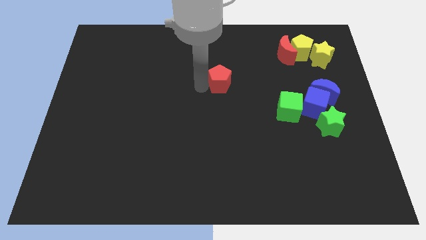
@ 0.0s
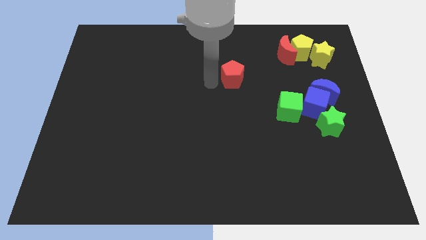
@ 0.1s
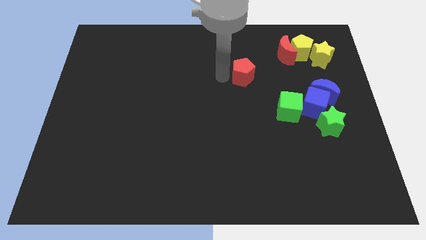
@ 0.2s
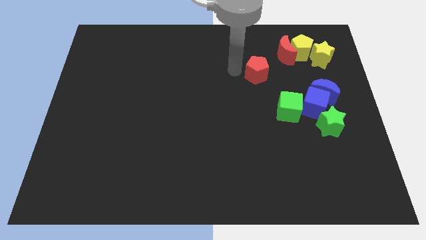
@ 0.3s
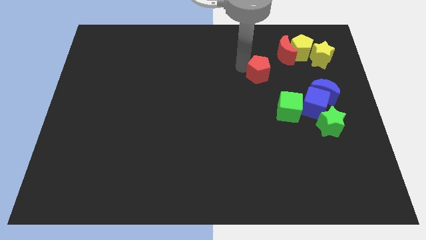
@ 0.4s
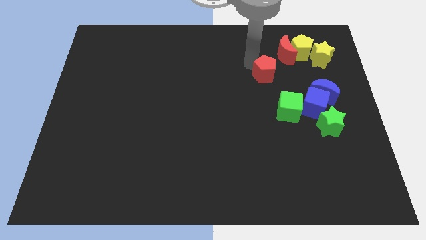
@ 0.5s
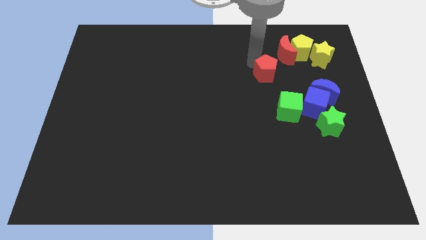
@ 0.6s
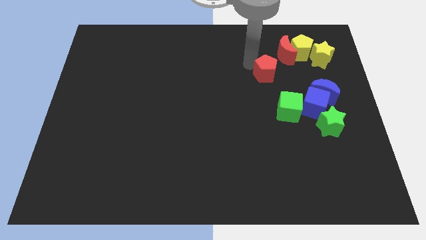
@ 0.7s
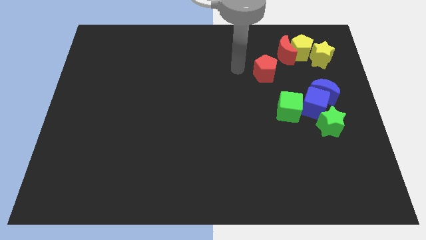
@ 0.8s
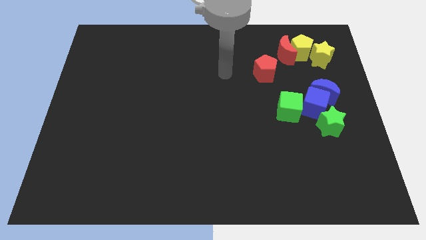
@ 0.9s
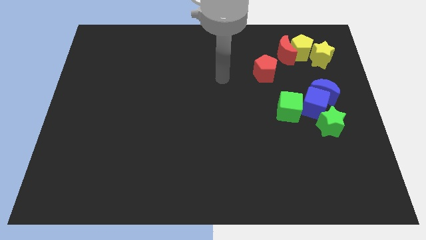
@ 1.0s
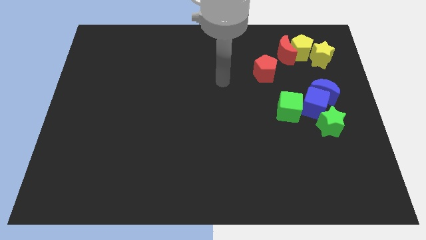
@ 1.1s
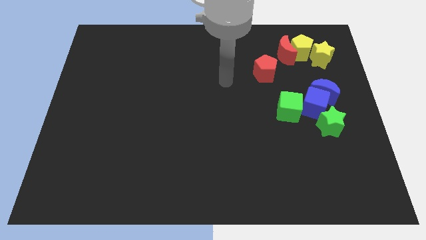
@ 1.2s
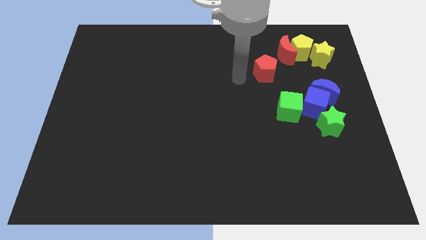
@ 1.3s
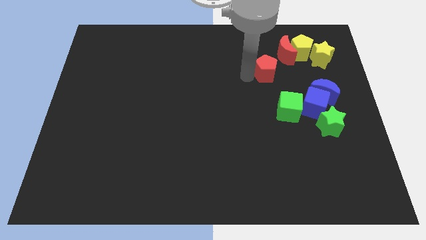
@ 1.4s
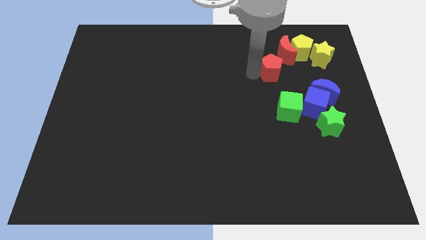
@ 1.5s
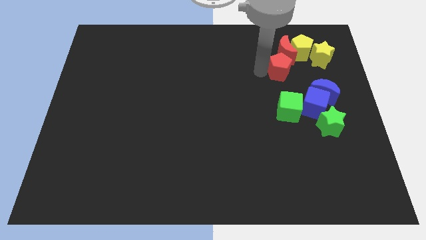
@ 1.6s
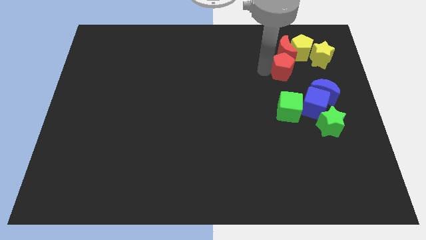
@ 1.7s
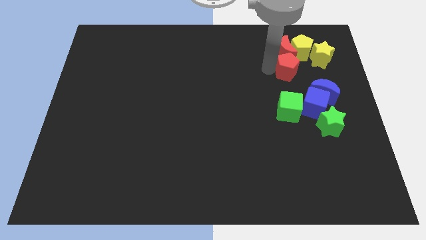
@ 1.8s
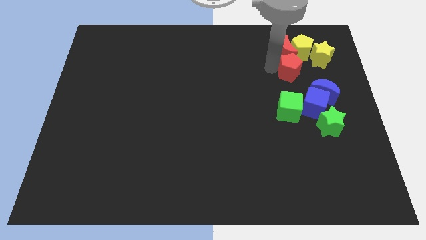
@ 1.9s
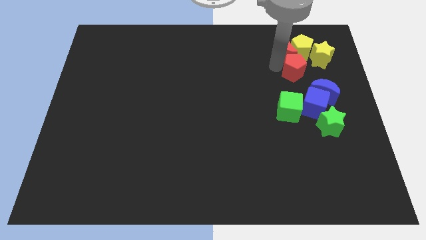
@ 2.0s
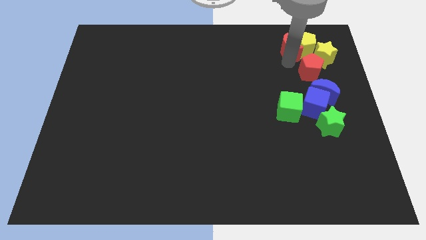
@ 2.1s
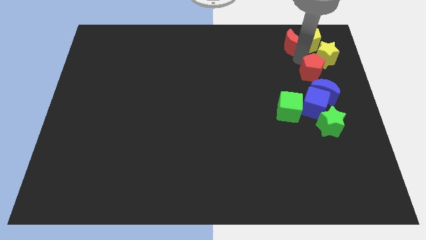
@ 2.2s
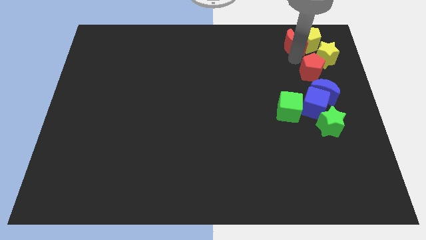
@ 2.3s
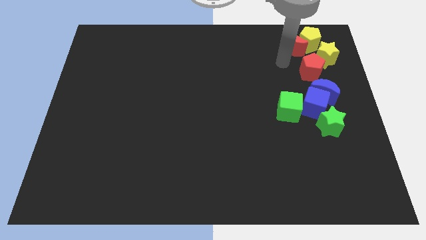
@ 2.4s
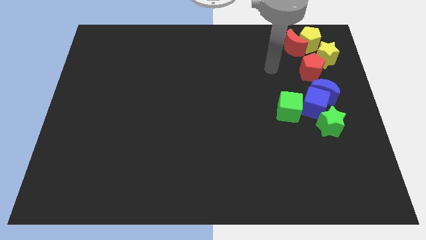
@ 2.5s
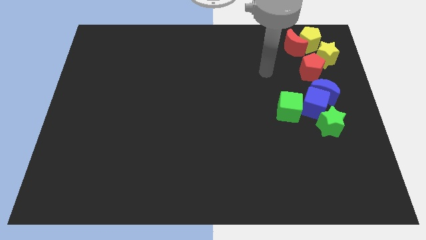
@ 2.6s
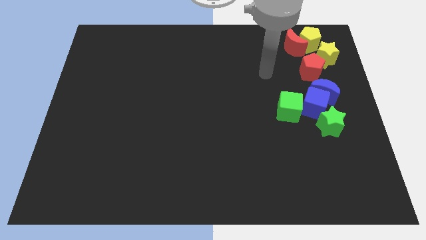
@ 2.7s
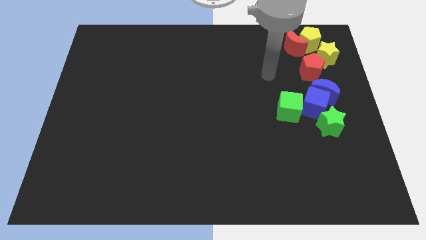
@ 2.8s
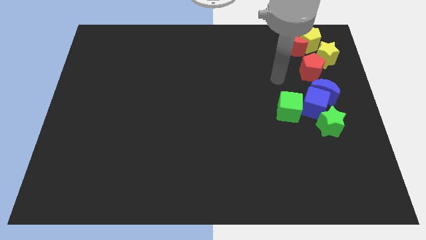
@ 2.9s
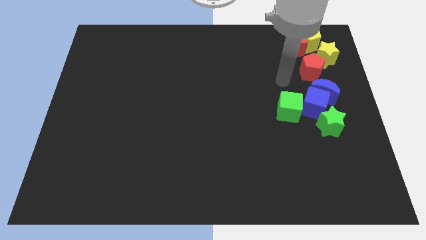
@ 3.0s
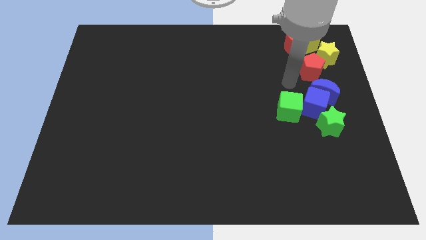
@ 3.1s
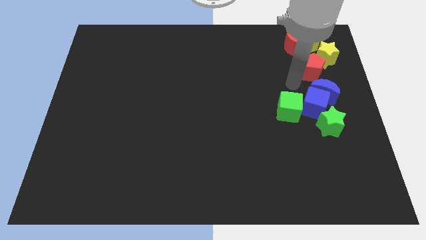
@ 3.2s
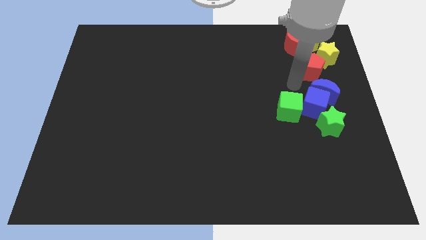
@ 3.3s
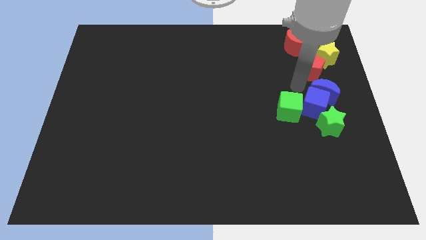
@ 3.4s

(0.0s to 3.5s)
move the red pentagon to the bottom left of the yellow star

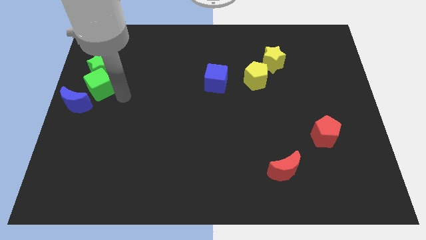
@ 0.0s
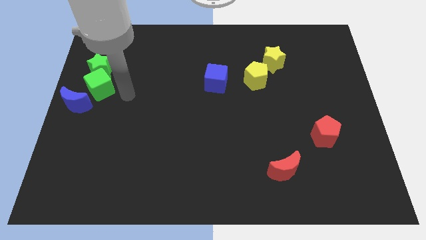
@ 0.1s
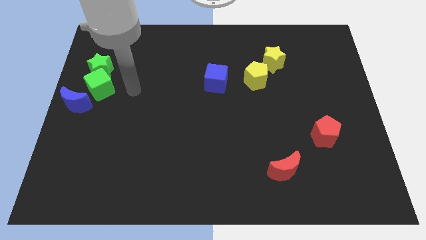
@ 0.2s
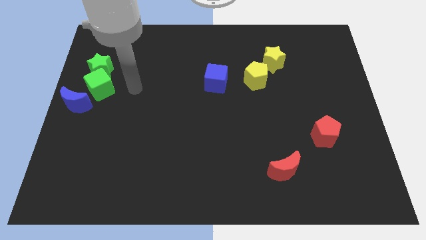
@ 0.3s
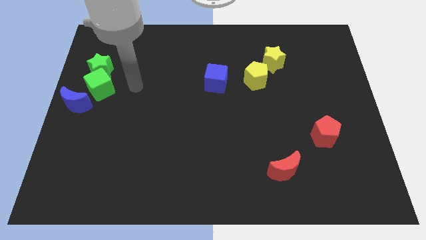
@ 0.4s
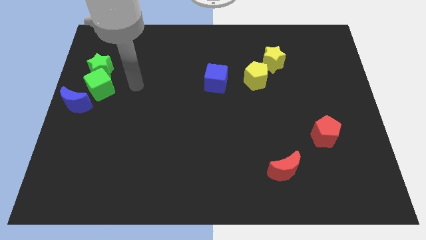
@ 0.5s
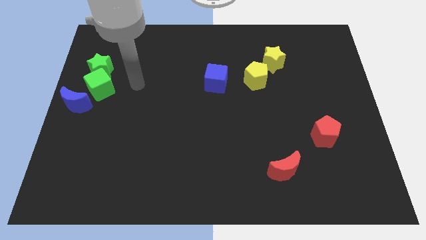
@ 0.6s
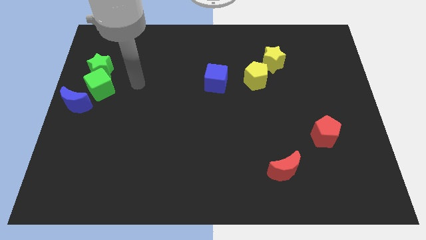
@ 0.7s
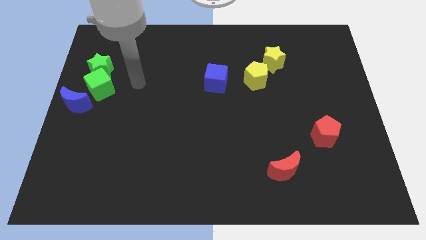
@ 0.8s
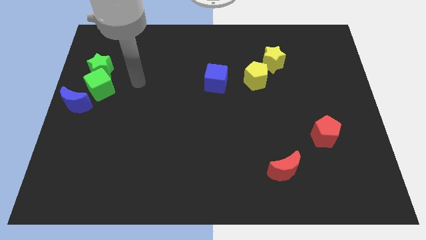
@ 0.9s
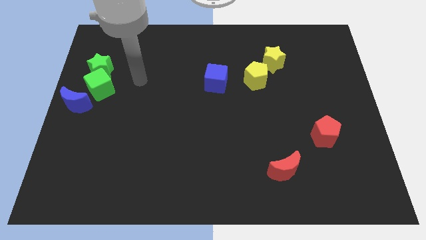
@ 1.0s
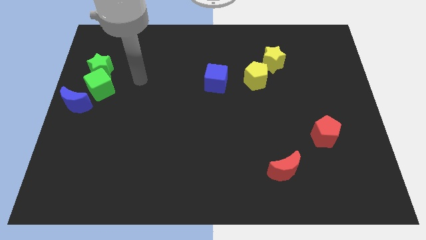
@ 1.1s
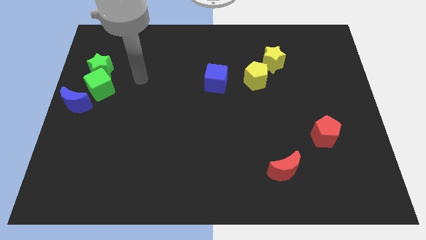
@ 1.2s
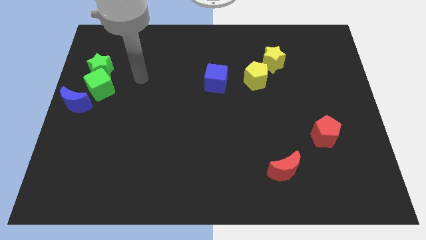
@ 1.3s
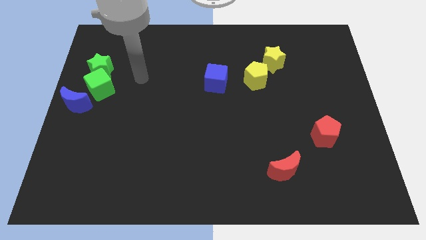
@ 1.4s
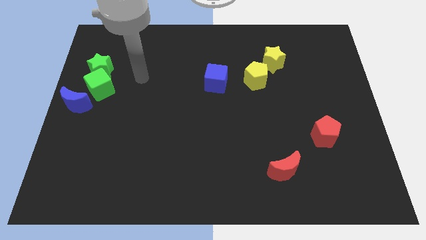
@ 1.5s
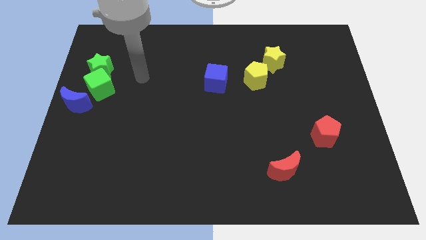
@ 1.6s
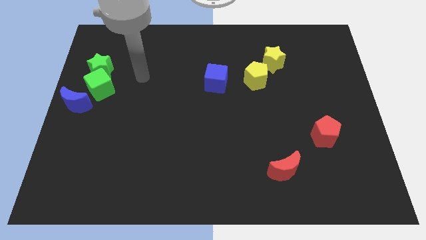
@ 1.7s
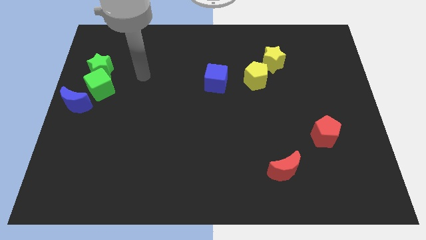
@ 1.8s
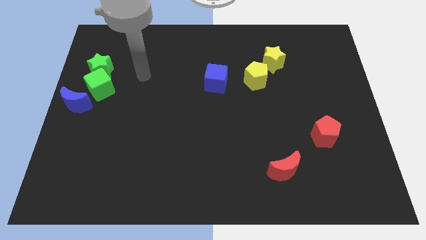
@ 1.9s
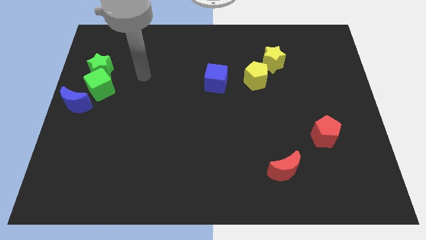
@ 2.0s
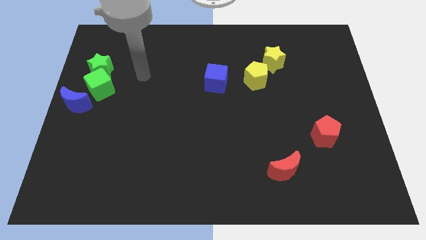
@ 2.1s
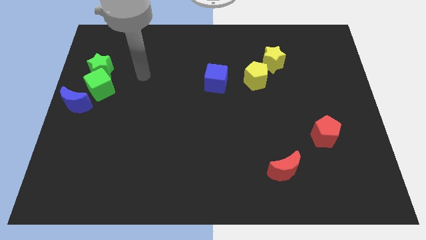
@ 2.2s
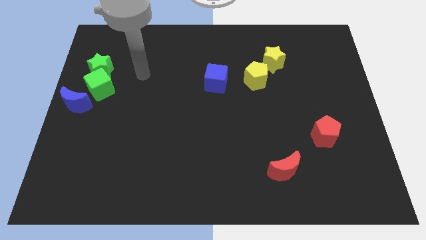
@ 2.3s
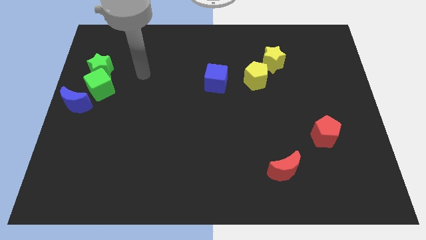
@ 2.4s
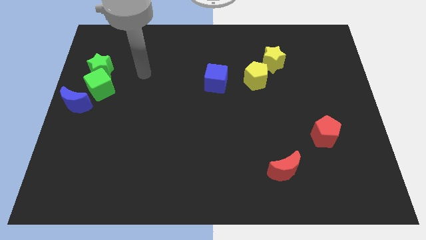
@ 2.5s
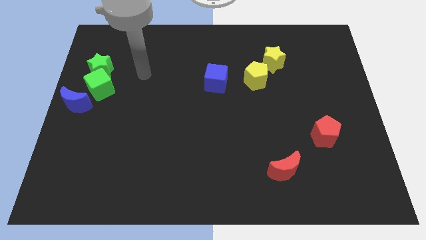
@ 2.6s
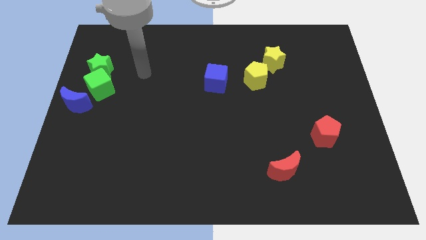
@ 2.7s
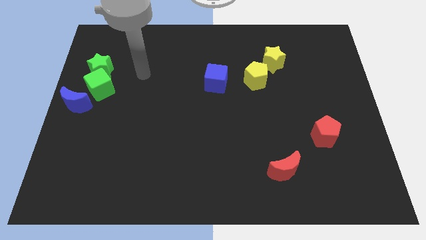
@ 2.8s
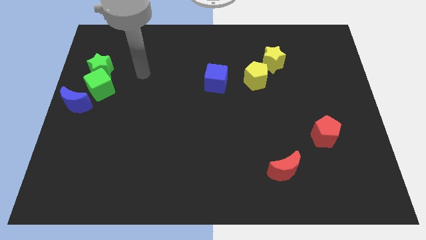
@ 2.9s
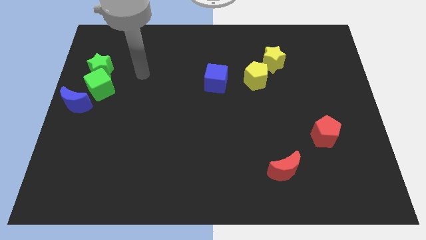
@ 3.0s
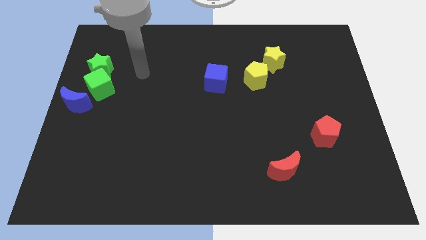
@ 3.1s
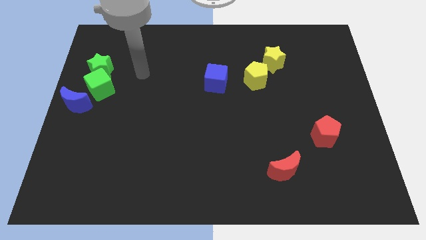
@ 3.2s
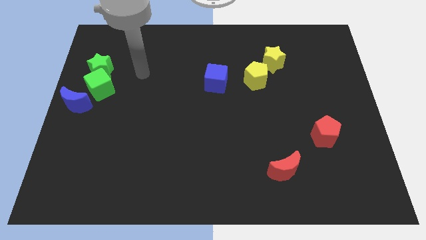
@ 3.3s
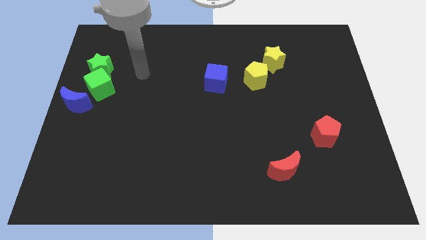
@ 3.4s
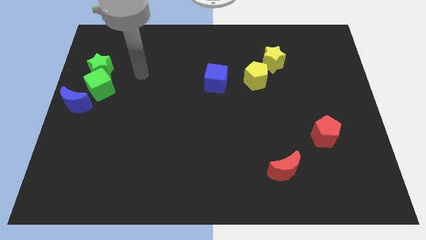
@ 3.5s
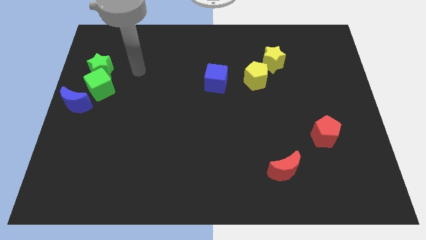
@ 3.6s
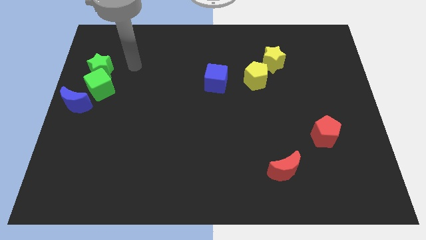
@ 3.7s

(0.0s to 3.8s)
move your arm right to the green star

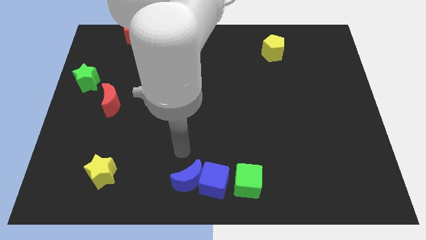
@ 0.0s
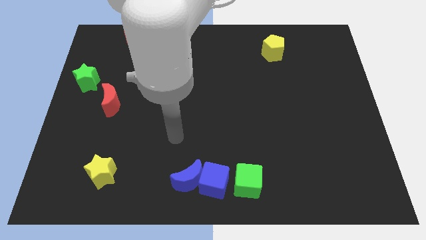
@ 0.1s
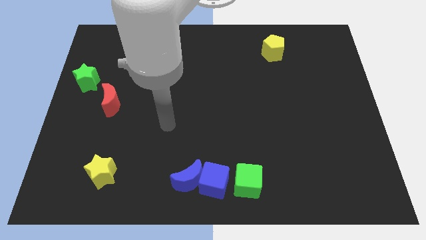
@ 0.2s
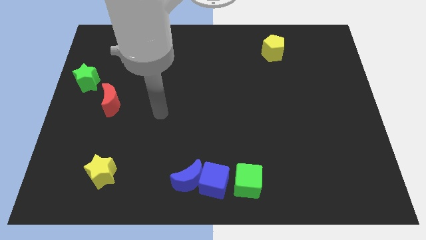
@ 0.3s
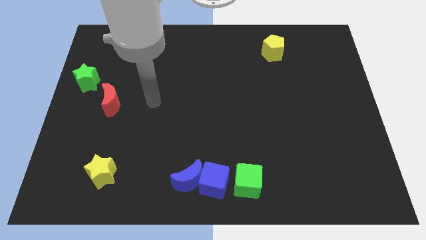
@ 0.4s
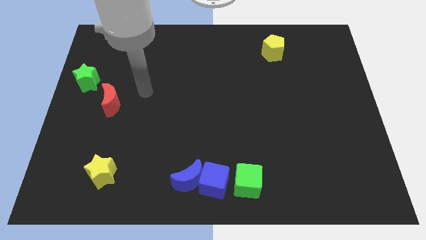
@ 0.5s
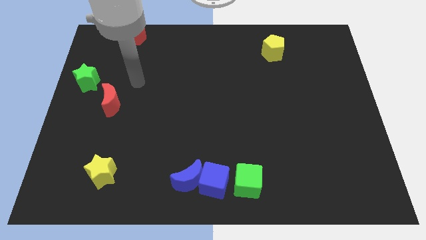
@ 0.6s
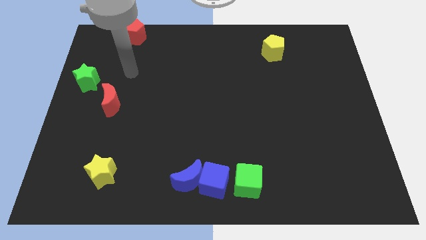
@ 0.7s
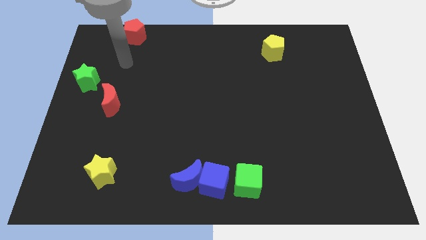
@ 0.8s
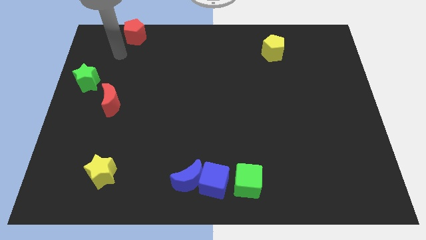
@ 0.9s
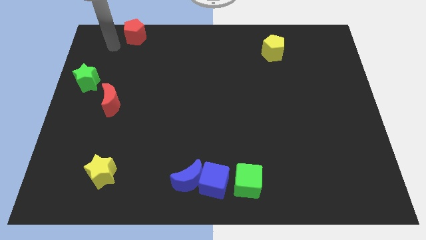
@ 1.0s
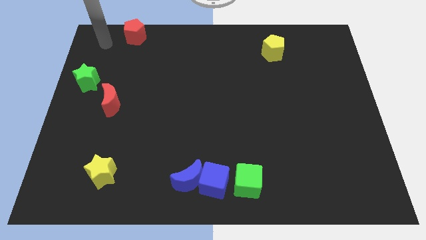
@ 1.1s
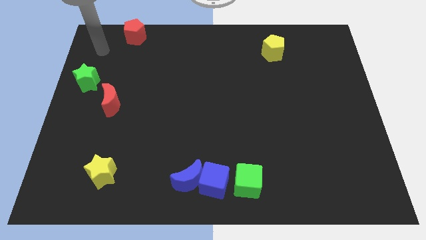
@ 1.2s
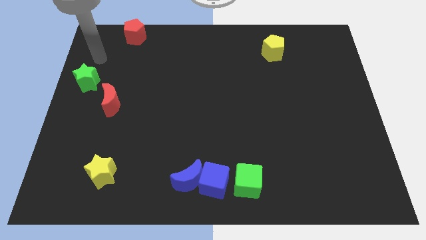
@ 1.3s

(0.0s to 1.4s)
move your arm away from the blue moon

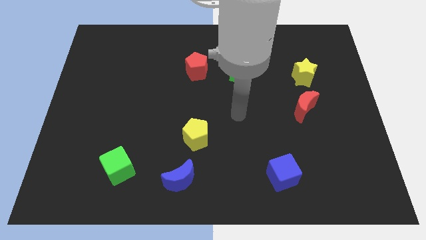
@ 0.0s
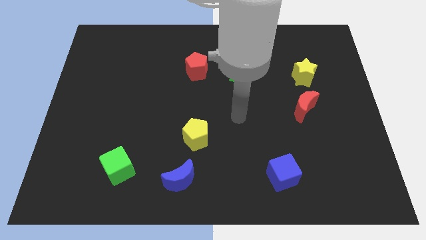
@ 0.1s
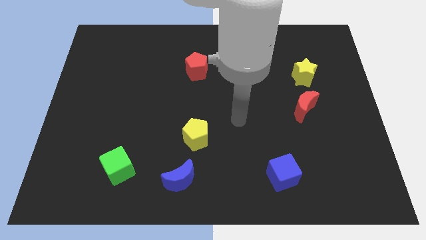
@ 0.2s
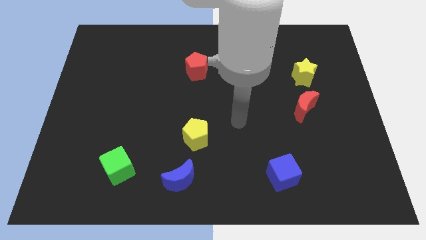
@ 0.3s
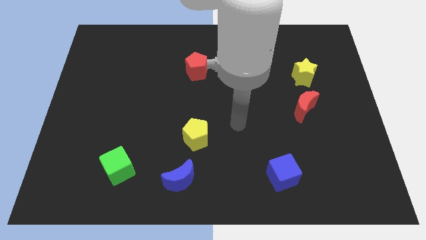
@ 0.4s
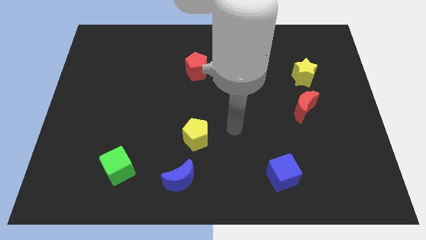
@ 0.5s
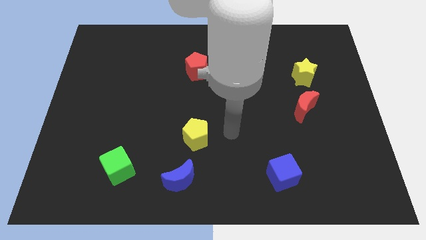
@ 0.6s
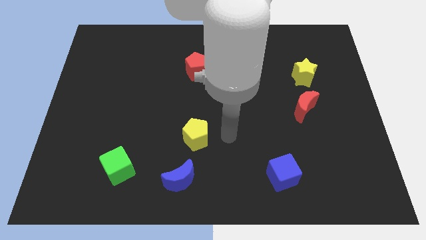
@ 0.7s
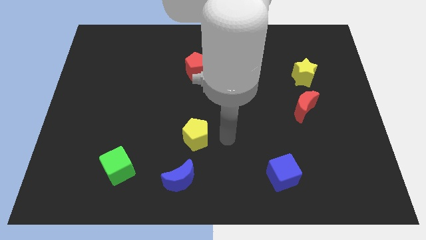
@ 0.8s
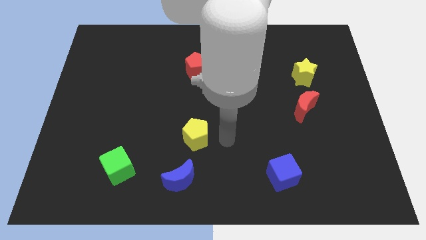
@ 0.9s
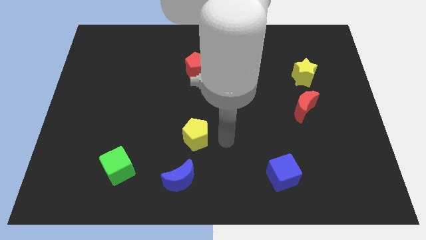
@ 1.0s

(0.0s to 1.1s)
place the arm to the right of the yellow pentagon
